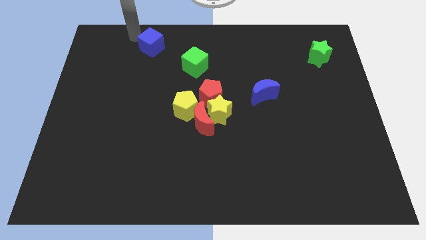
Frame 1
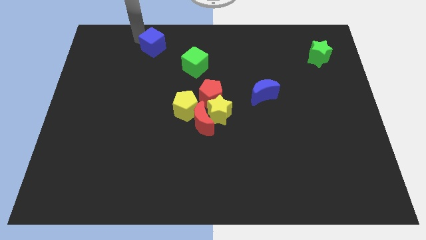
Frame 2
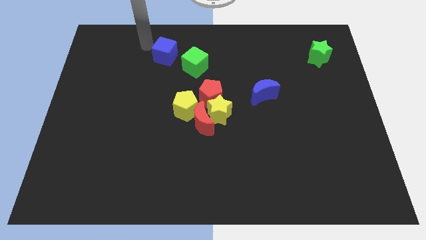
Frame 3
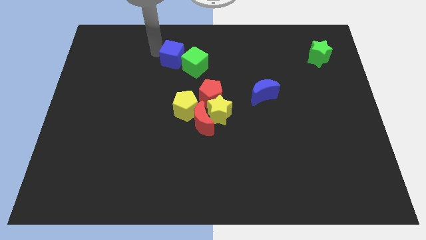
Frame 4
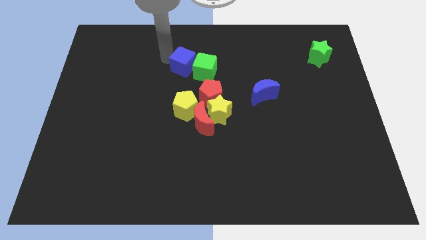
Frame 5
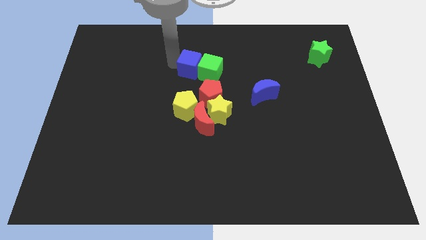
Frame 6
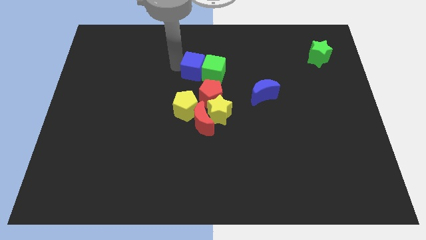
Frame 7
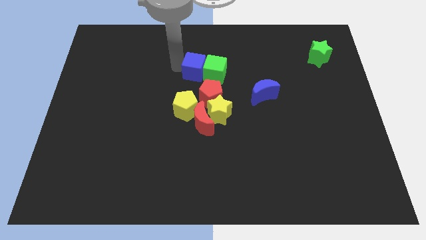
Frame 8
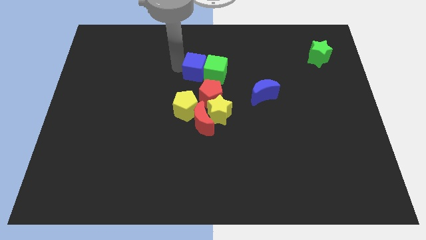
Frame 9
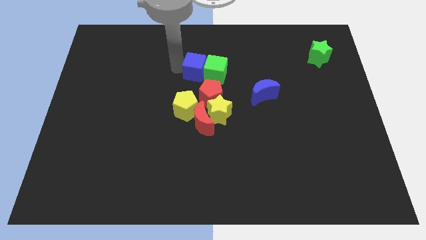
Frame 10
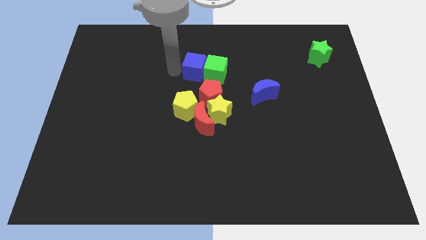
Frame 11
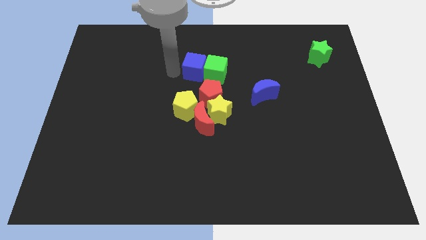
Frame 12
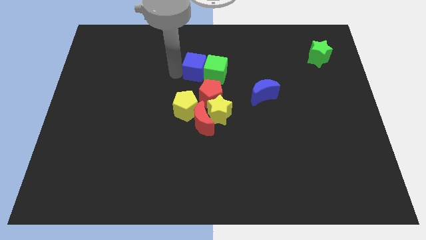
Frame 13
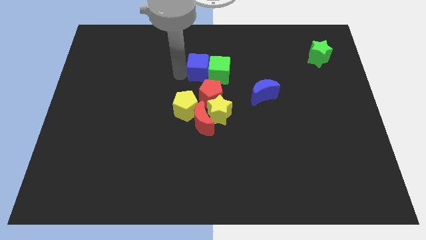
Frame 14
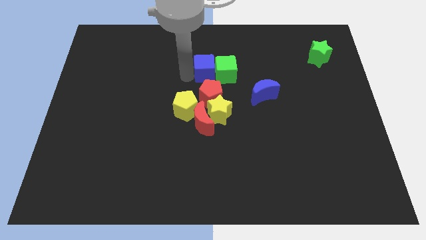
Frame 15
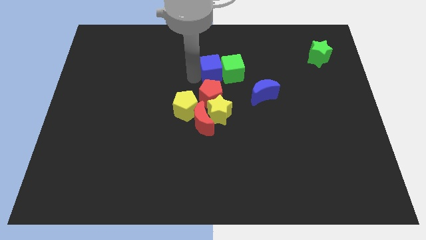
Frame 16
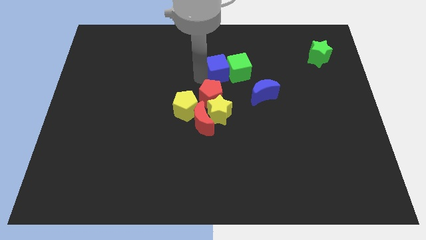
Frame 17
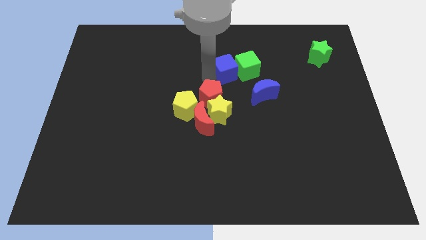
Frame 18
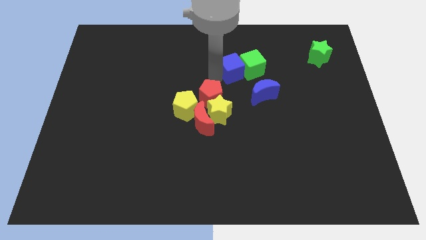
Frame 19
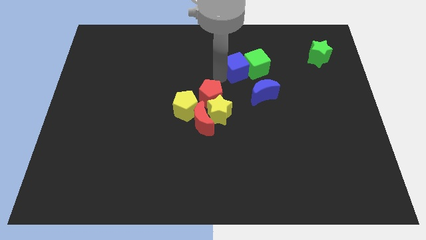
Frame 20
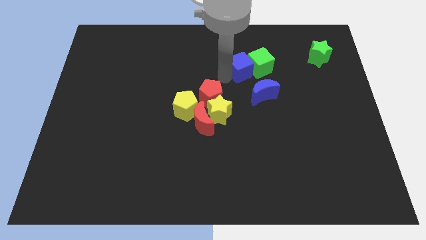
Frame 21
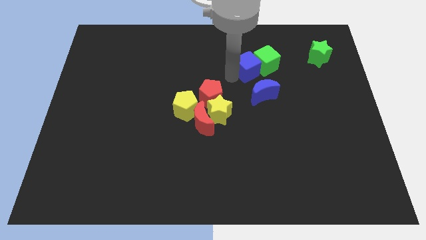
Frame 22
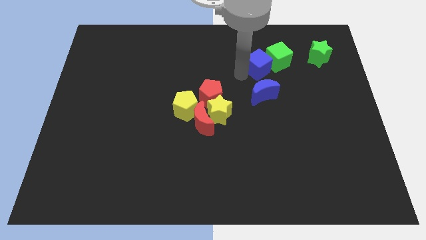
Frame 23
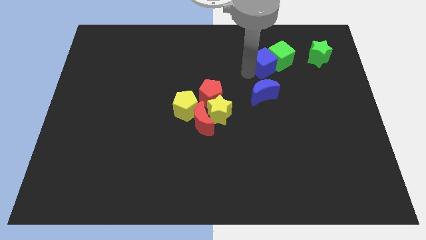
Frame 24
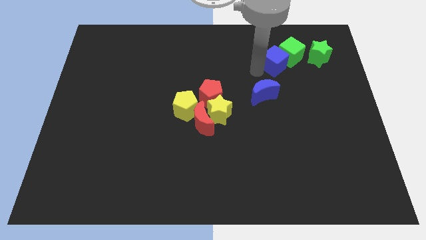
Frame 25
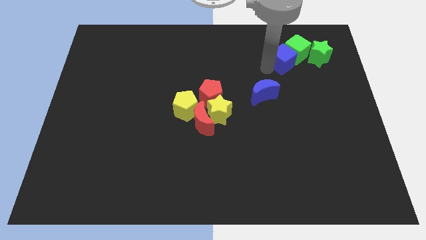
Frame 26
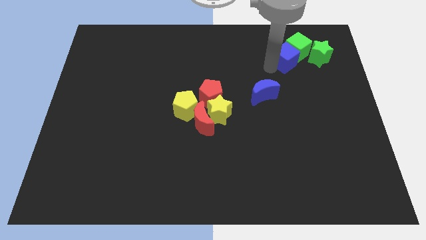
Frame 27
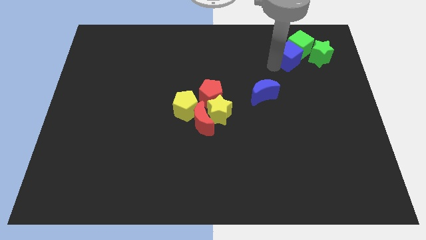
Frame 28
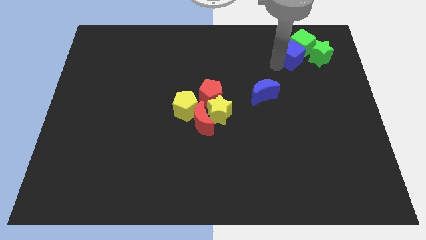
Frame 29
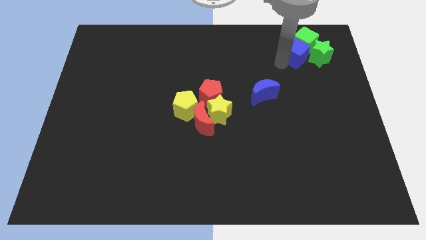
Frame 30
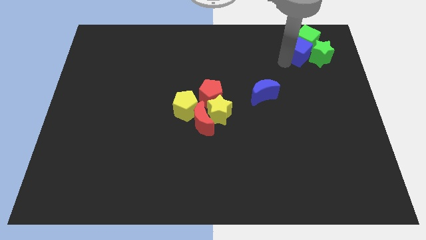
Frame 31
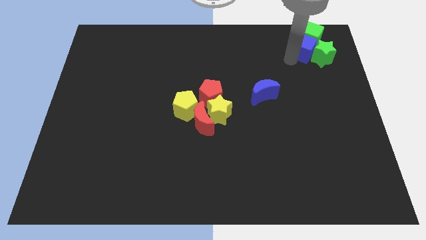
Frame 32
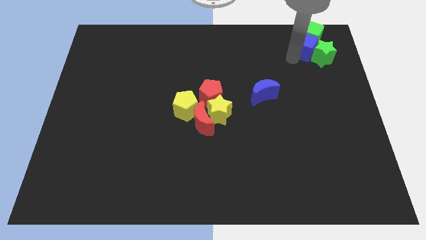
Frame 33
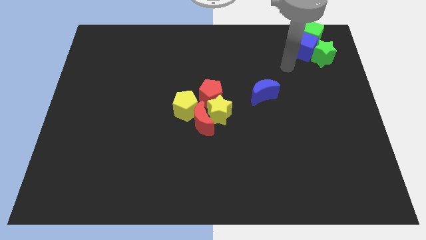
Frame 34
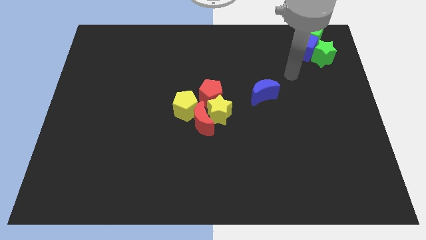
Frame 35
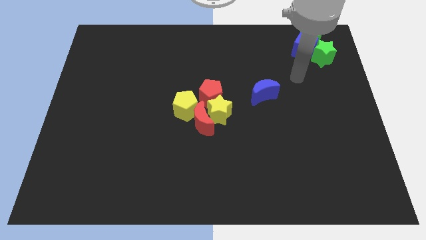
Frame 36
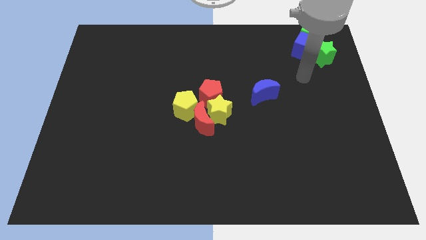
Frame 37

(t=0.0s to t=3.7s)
move the blue cube and green blocks to the top right on the board

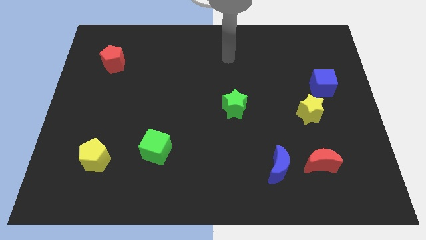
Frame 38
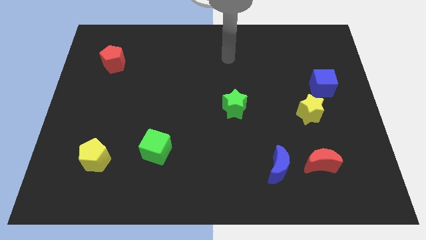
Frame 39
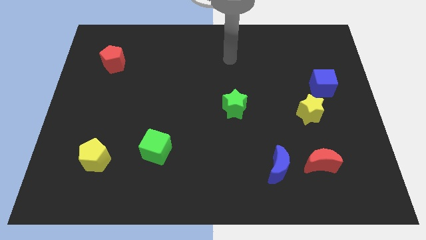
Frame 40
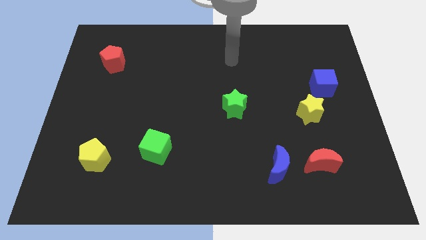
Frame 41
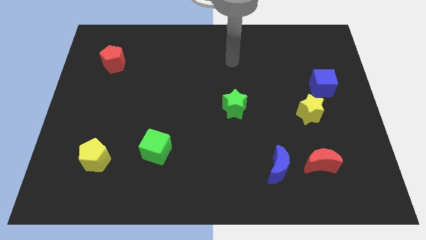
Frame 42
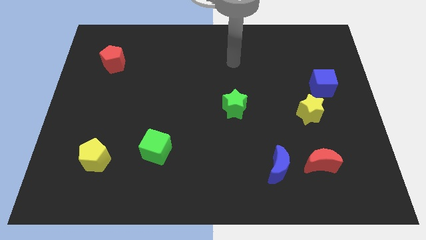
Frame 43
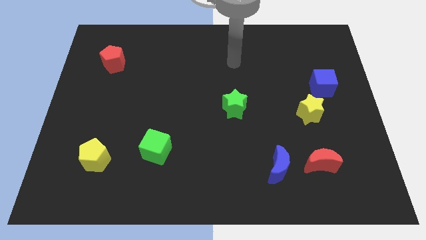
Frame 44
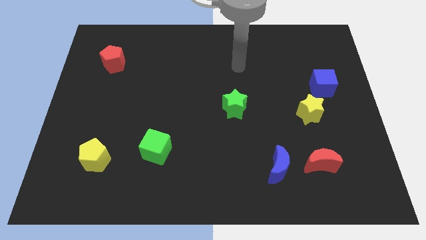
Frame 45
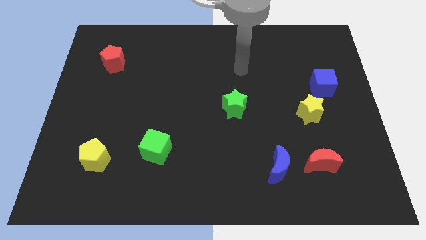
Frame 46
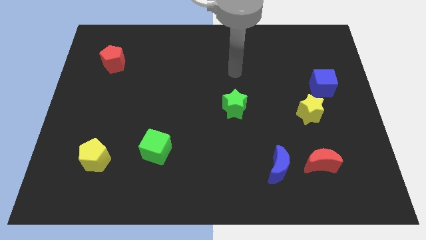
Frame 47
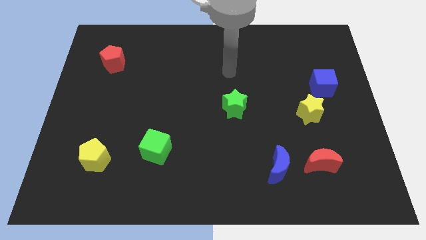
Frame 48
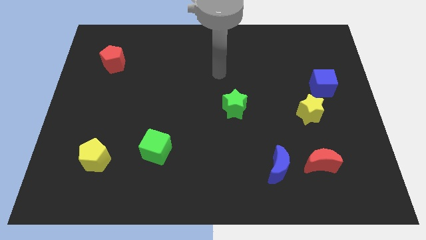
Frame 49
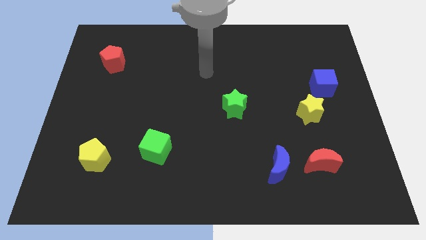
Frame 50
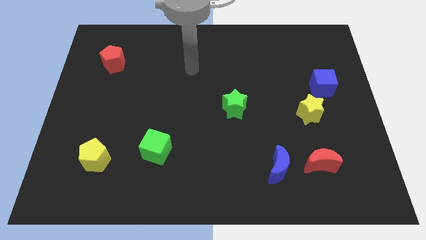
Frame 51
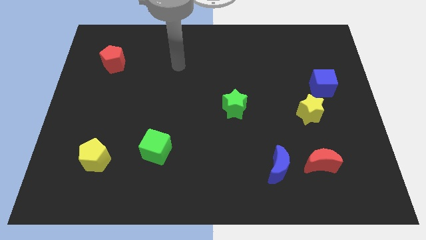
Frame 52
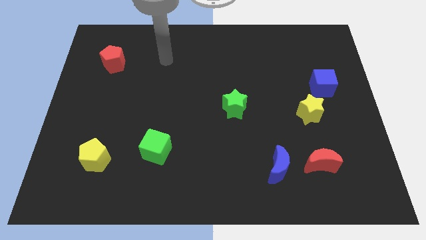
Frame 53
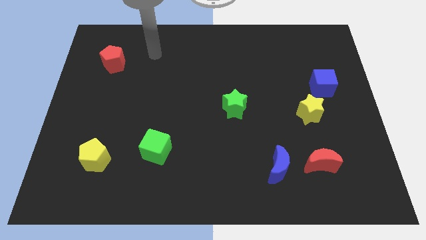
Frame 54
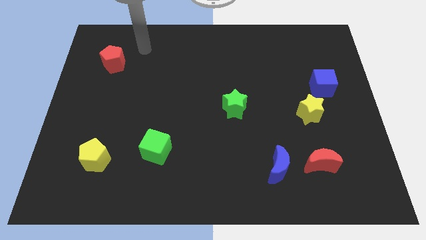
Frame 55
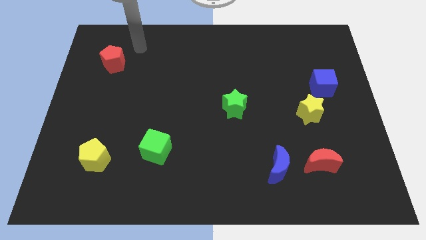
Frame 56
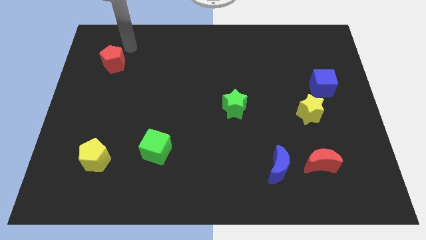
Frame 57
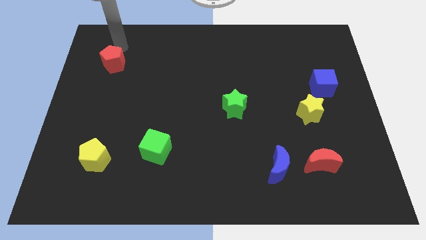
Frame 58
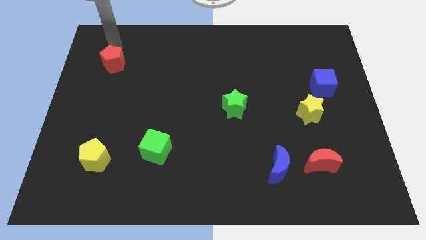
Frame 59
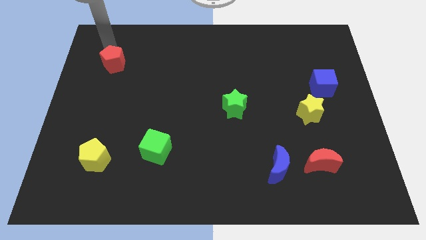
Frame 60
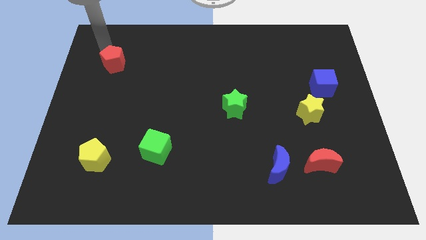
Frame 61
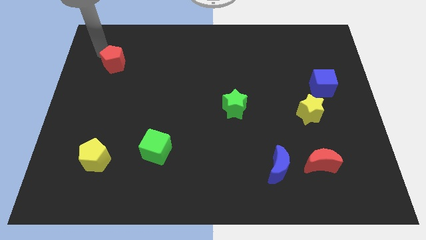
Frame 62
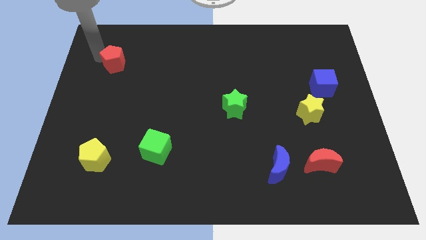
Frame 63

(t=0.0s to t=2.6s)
place the arm near the red pentagon

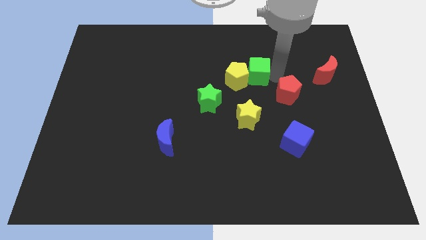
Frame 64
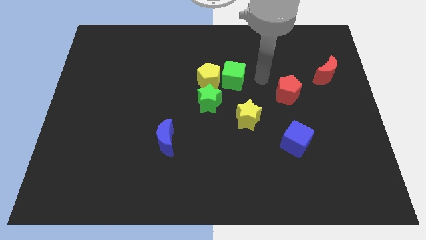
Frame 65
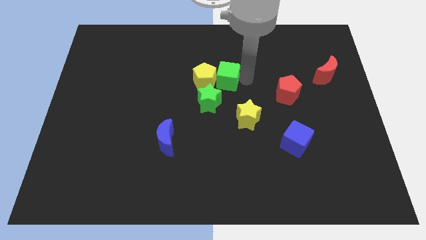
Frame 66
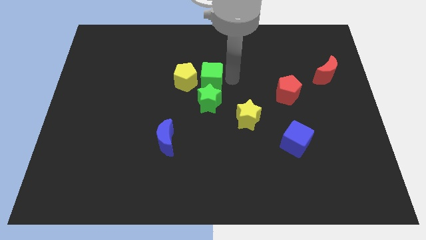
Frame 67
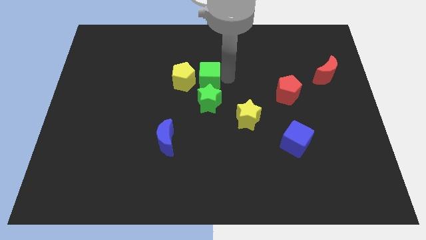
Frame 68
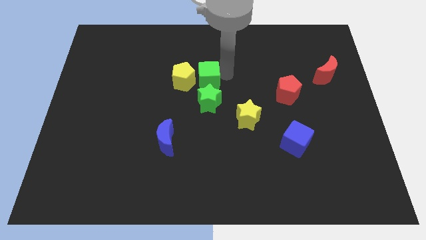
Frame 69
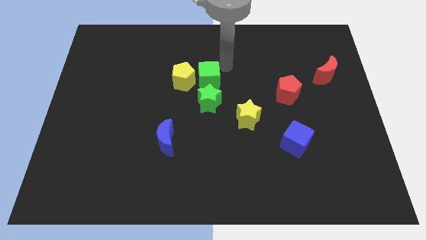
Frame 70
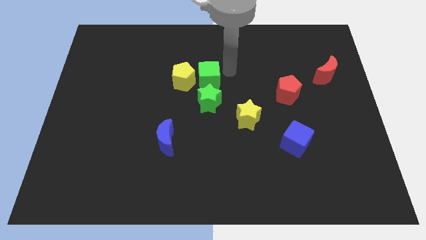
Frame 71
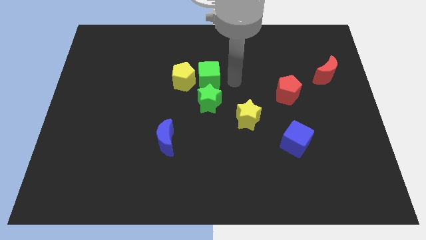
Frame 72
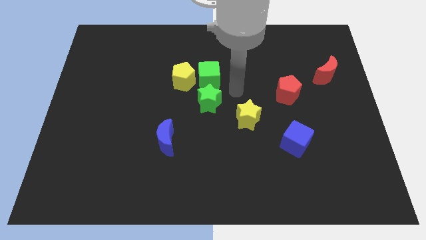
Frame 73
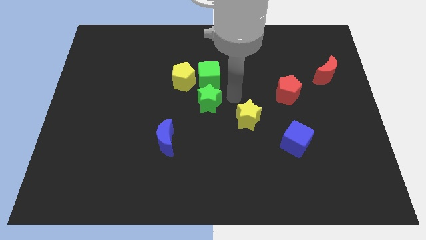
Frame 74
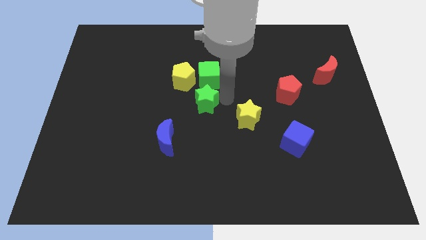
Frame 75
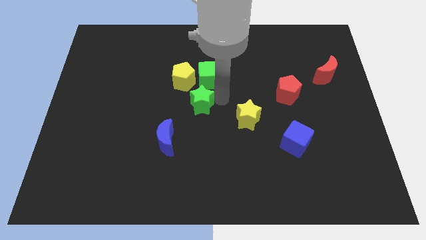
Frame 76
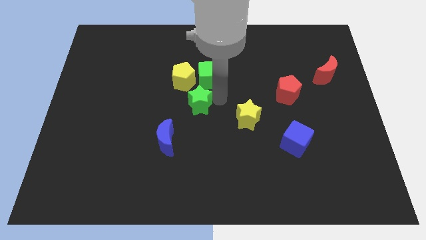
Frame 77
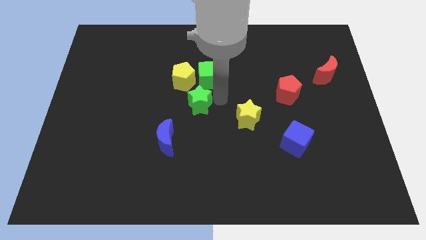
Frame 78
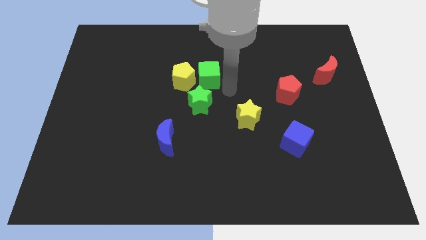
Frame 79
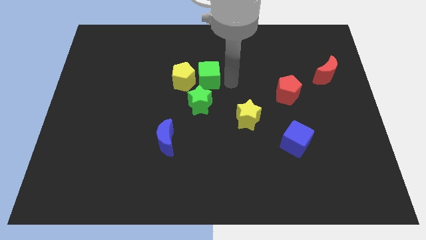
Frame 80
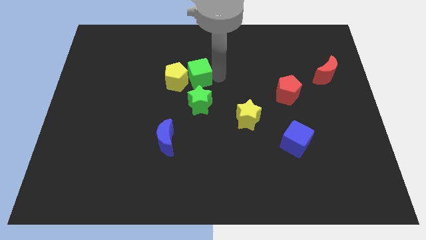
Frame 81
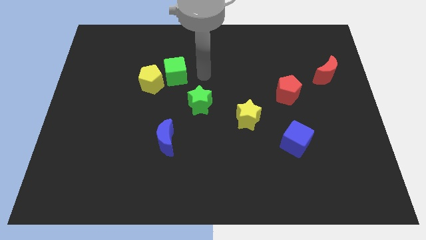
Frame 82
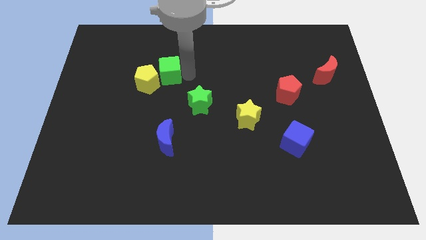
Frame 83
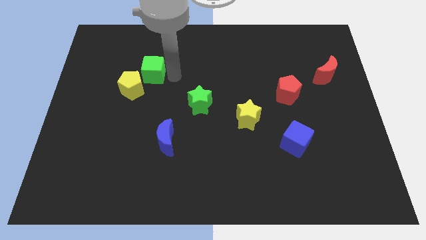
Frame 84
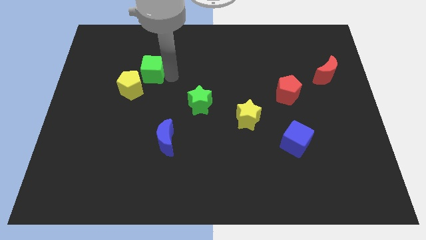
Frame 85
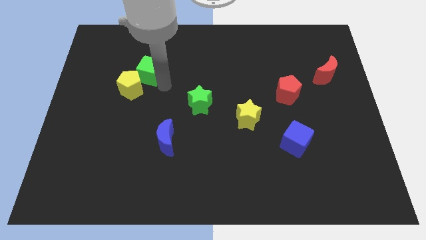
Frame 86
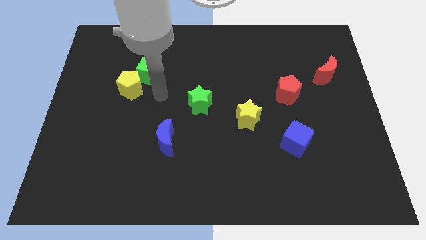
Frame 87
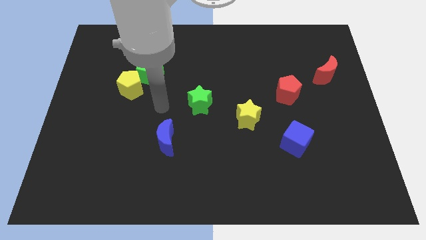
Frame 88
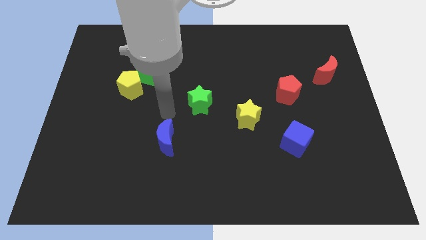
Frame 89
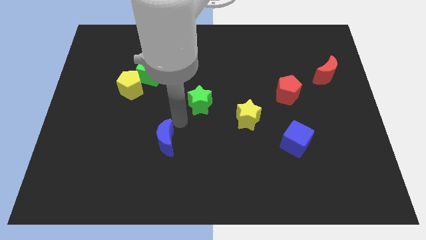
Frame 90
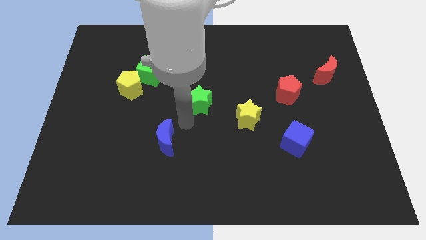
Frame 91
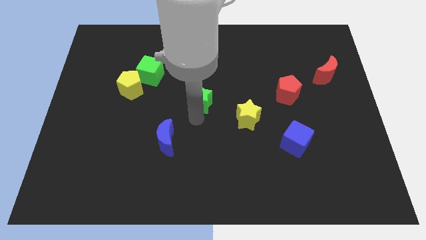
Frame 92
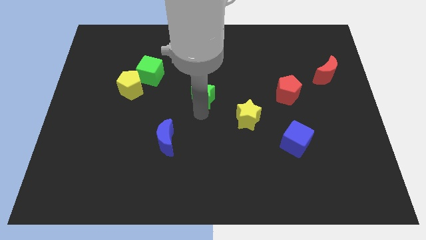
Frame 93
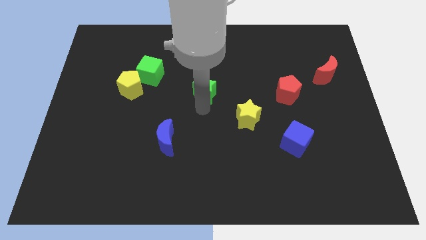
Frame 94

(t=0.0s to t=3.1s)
push green cube into the yellow pentagon
